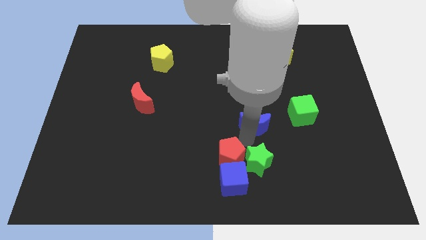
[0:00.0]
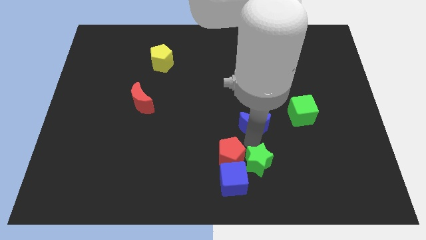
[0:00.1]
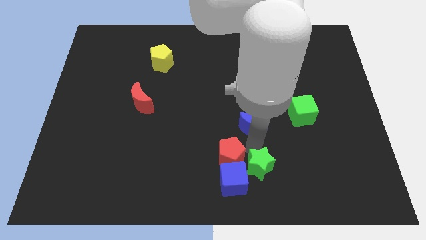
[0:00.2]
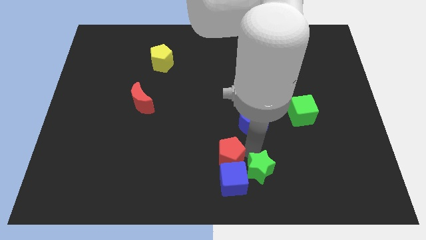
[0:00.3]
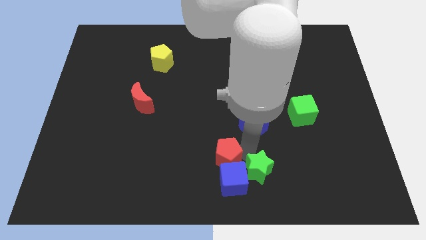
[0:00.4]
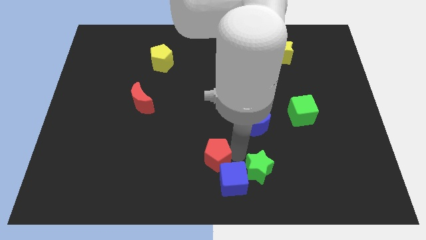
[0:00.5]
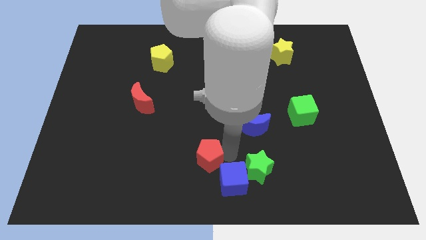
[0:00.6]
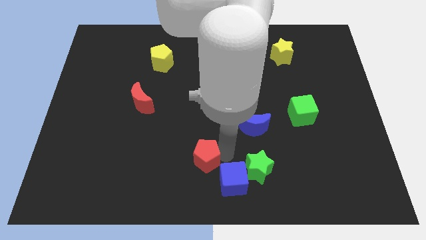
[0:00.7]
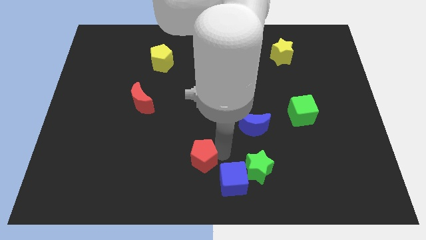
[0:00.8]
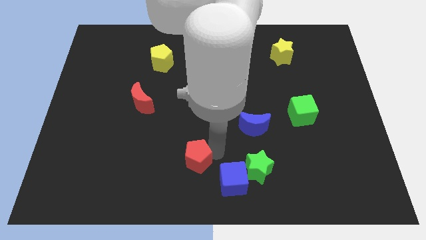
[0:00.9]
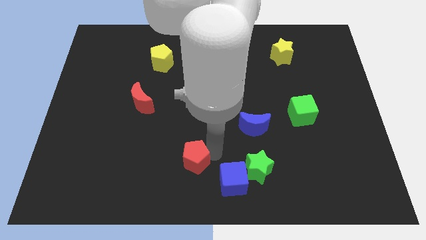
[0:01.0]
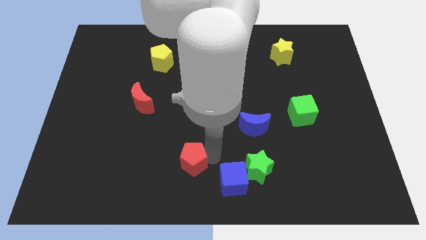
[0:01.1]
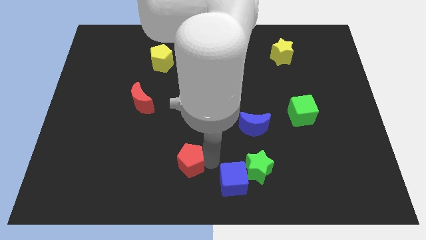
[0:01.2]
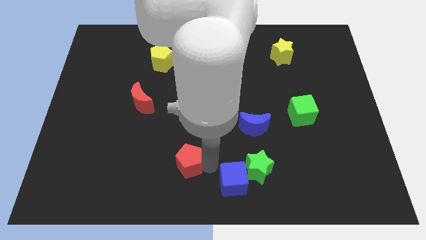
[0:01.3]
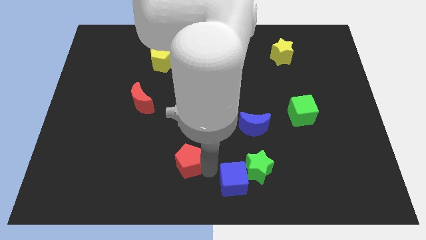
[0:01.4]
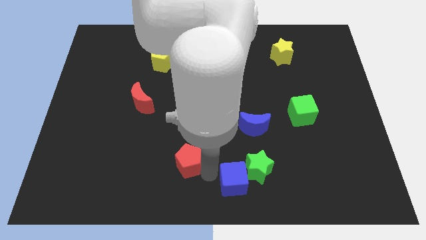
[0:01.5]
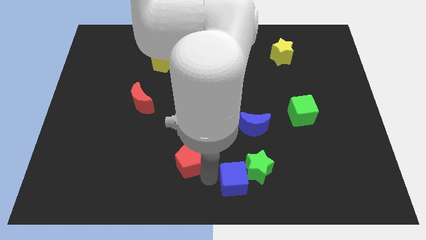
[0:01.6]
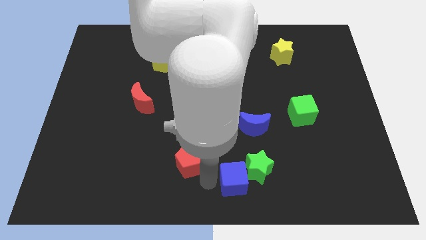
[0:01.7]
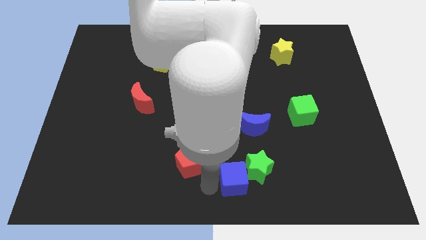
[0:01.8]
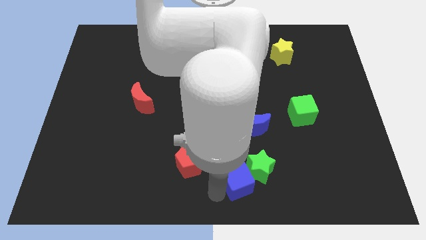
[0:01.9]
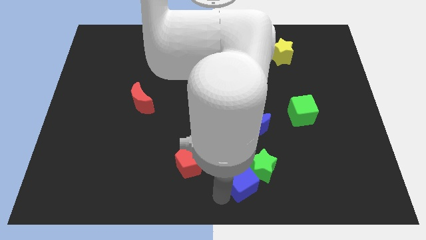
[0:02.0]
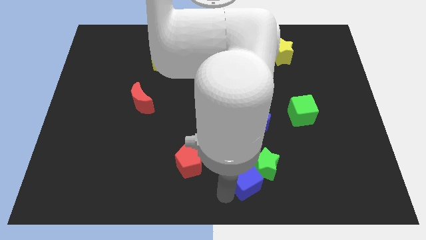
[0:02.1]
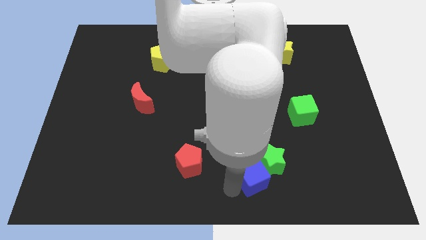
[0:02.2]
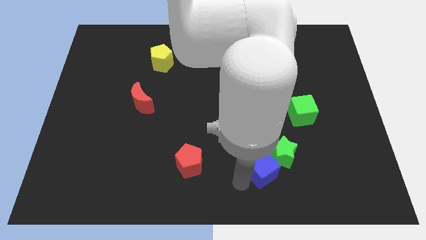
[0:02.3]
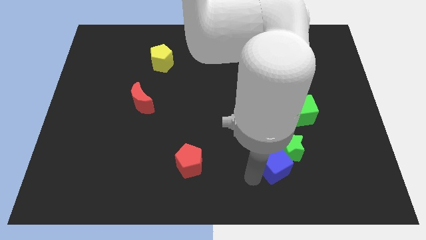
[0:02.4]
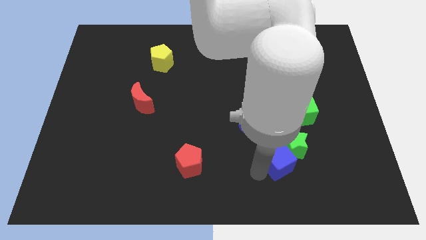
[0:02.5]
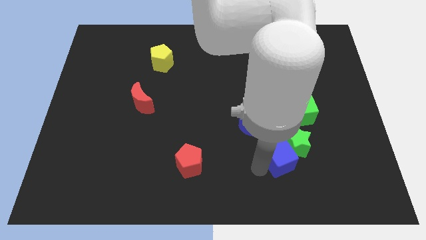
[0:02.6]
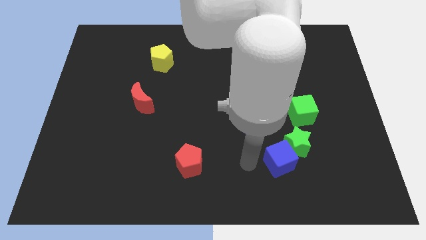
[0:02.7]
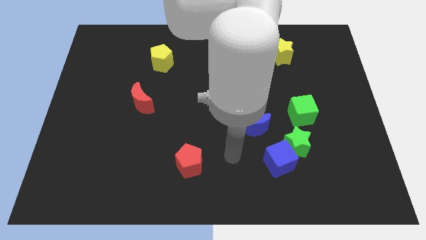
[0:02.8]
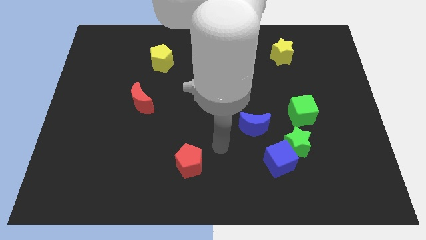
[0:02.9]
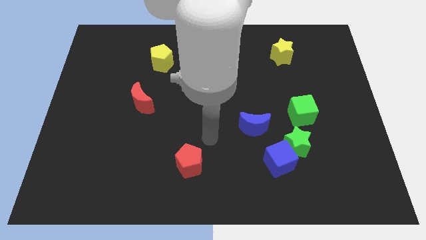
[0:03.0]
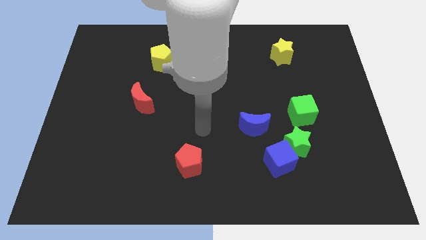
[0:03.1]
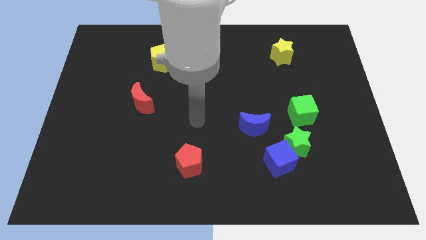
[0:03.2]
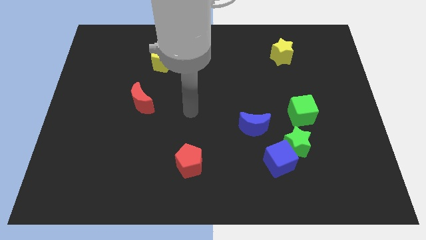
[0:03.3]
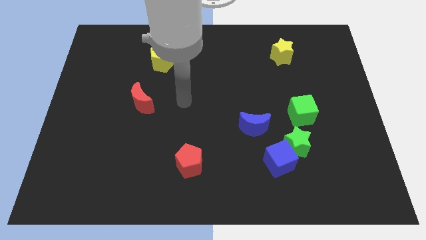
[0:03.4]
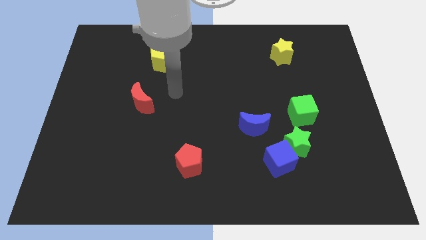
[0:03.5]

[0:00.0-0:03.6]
separate red pentagon from the green star

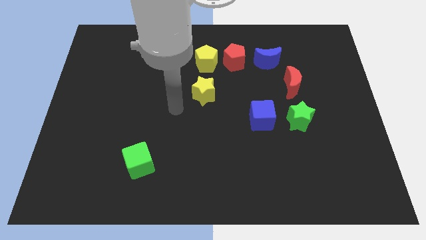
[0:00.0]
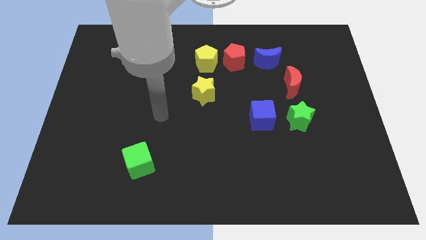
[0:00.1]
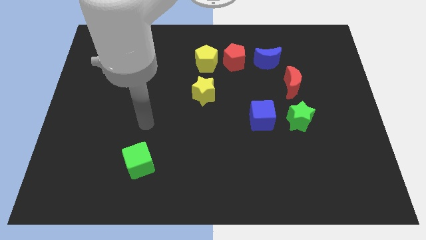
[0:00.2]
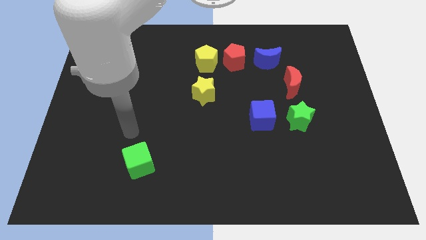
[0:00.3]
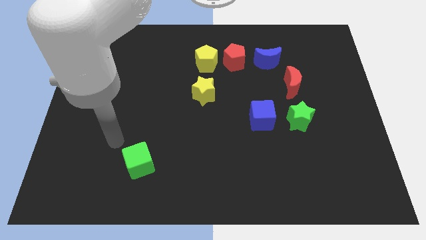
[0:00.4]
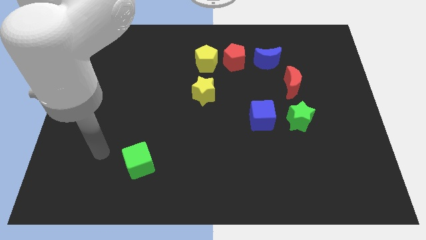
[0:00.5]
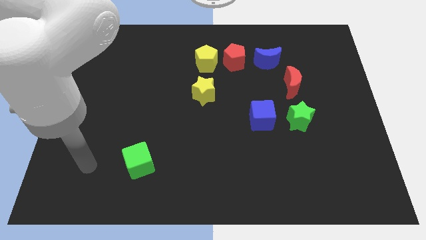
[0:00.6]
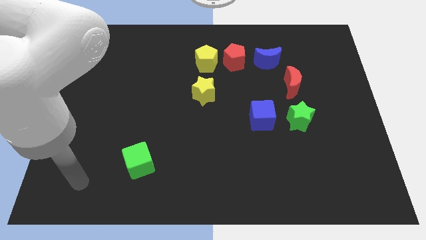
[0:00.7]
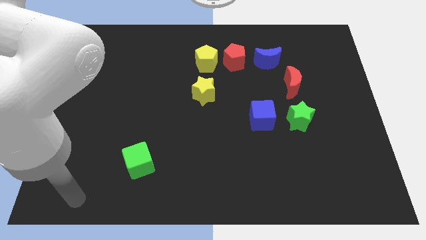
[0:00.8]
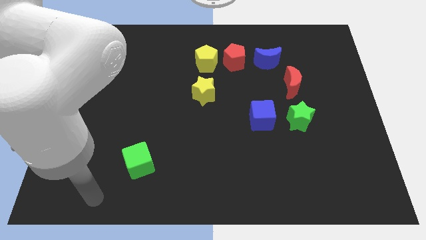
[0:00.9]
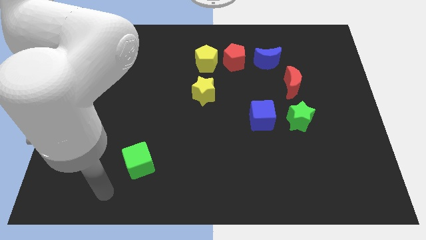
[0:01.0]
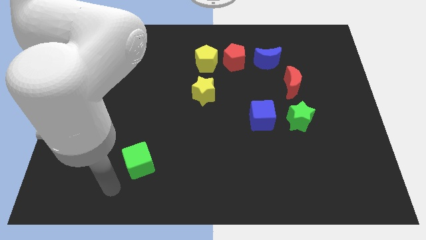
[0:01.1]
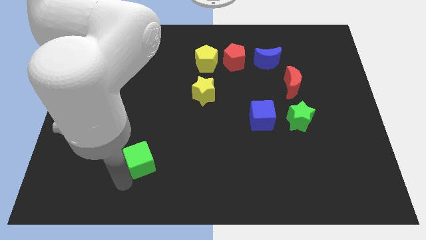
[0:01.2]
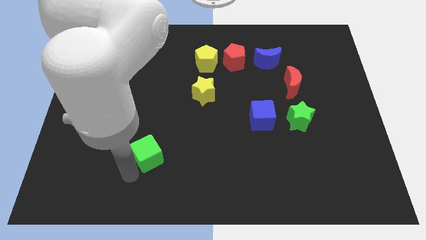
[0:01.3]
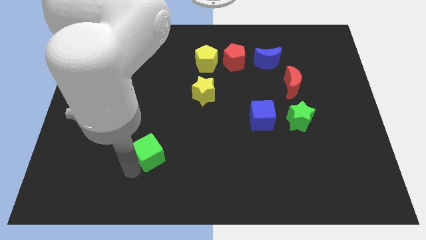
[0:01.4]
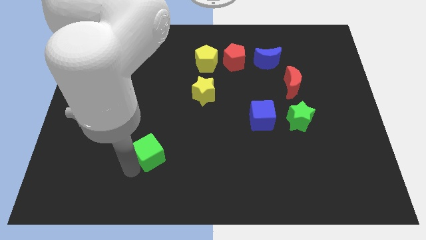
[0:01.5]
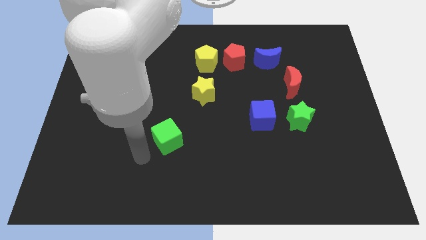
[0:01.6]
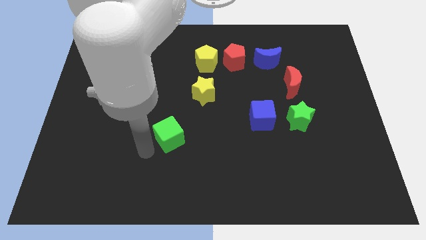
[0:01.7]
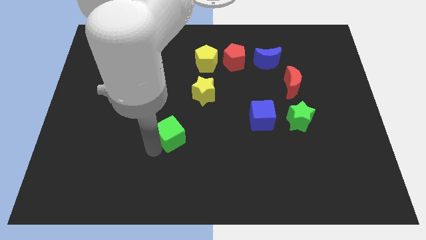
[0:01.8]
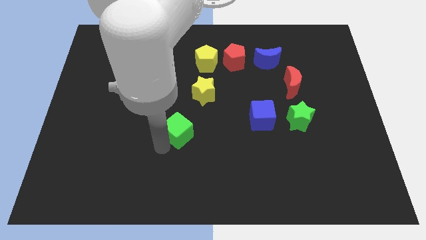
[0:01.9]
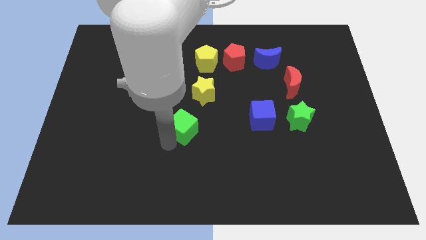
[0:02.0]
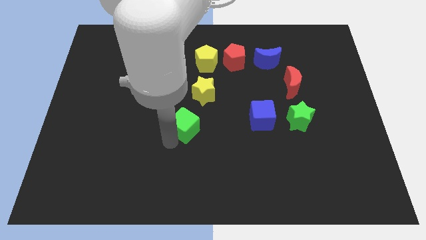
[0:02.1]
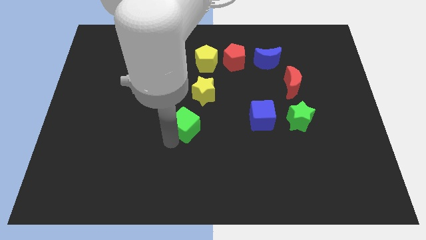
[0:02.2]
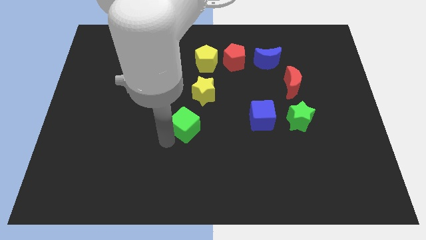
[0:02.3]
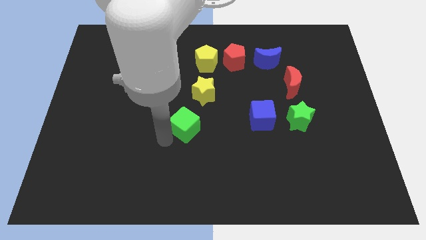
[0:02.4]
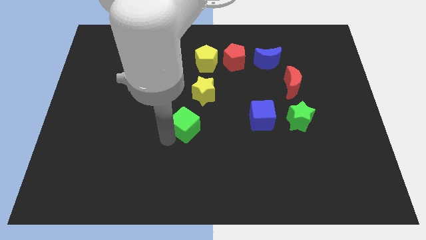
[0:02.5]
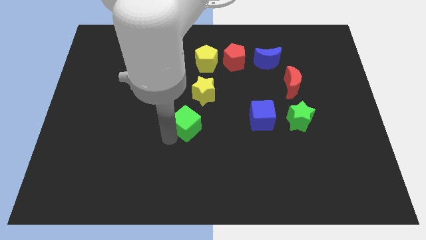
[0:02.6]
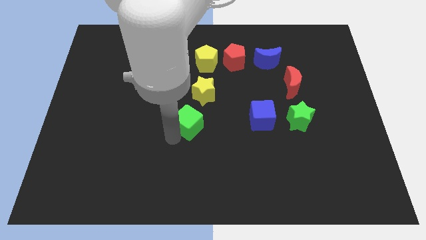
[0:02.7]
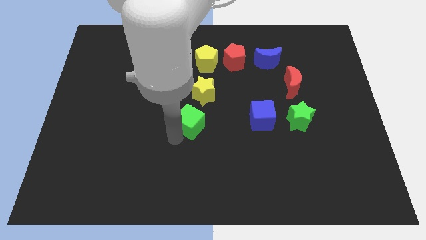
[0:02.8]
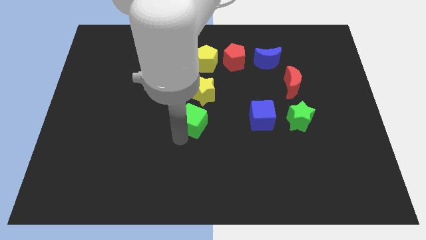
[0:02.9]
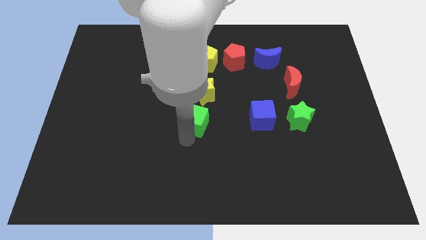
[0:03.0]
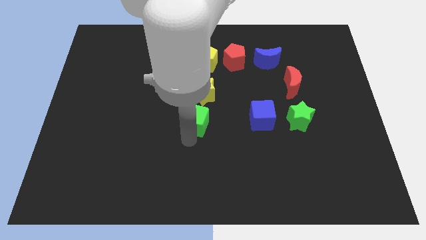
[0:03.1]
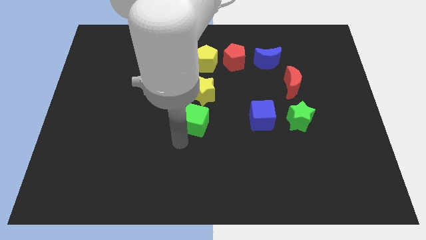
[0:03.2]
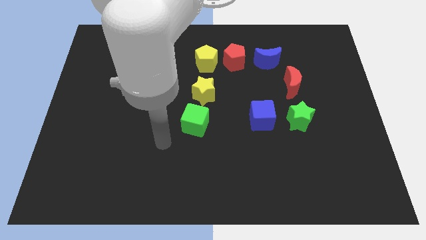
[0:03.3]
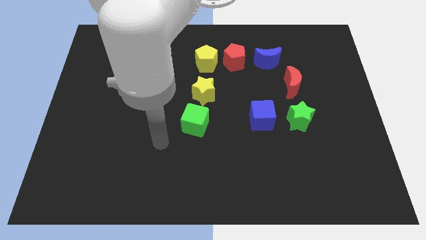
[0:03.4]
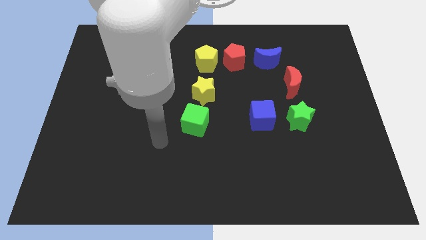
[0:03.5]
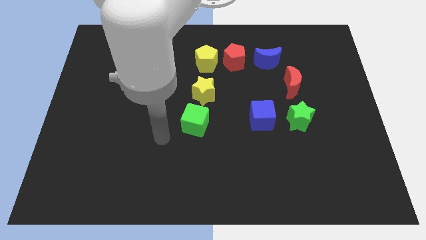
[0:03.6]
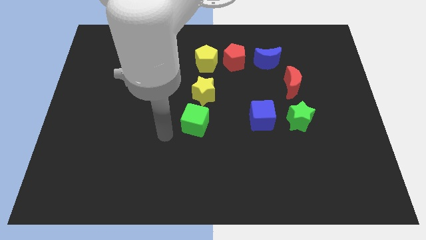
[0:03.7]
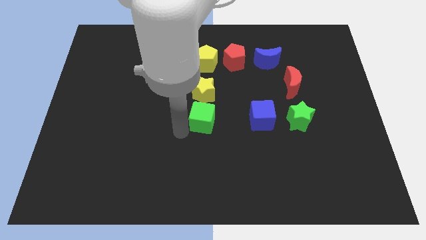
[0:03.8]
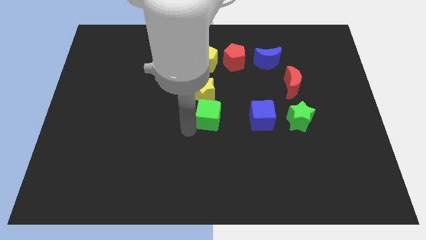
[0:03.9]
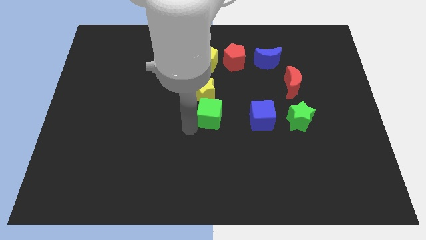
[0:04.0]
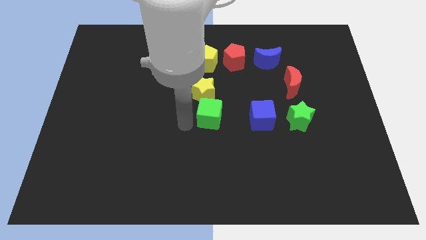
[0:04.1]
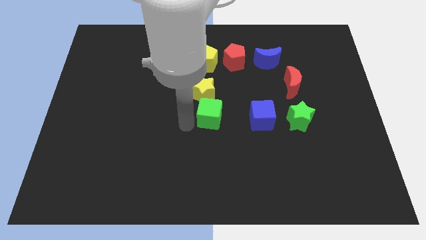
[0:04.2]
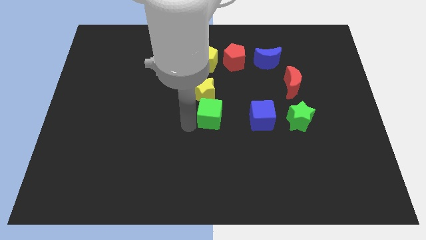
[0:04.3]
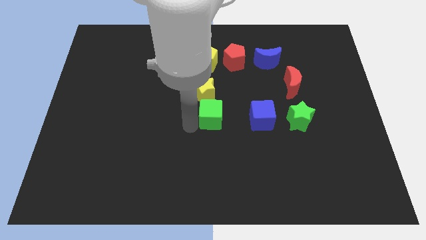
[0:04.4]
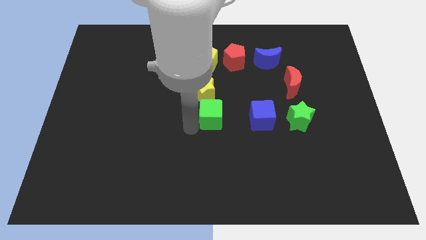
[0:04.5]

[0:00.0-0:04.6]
place the green cube below the yellow star to form a vertical line

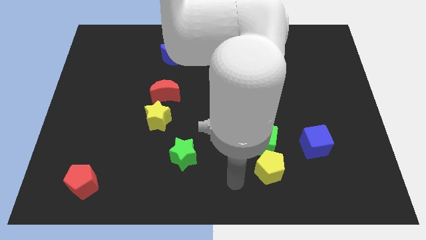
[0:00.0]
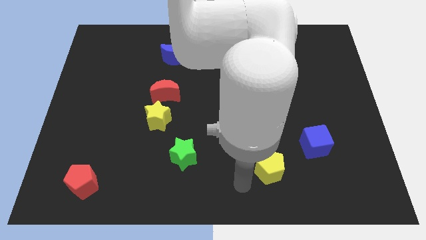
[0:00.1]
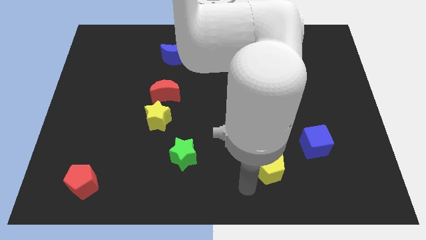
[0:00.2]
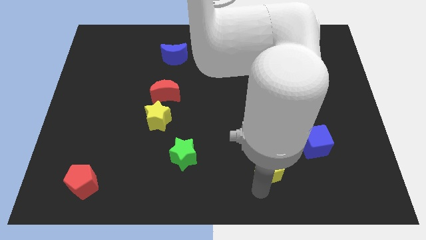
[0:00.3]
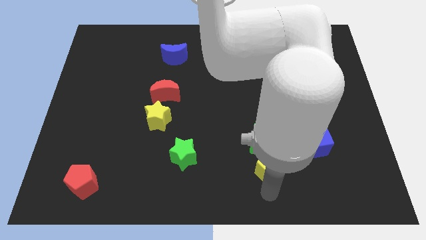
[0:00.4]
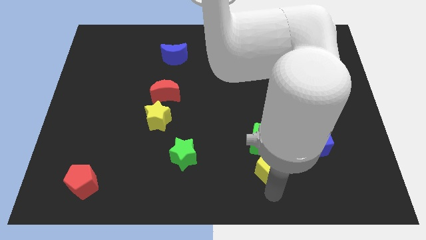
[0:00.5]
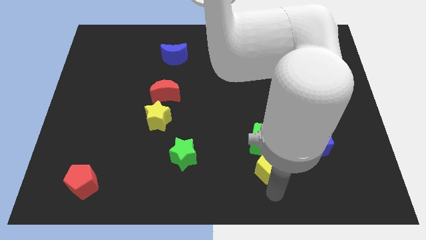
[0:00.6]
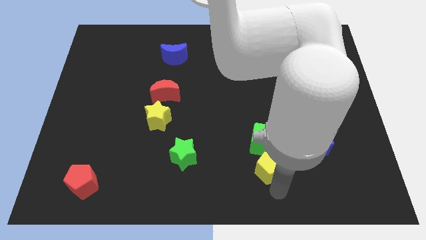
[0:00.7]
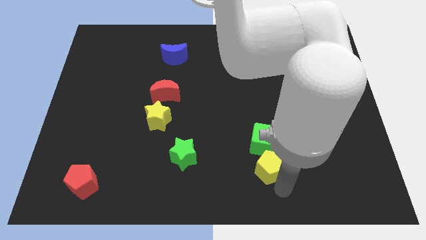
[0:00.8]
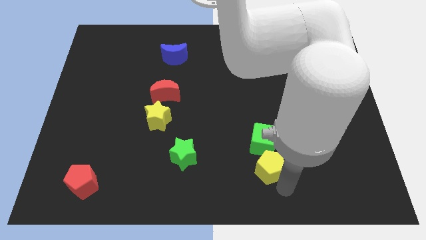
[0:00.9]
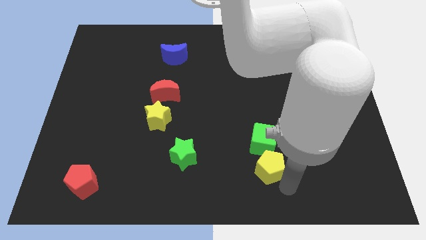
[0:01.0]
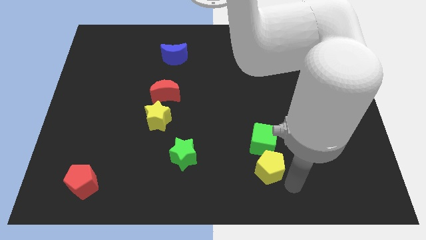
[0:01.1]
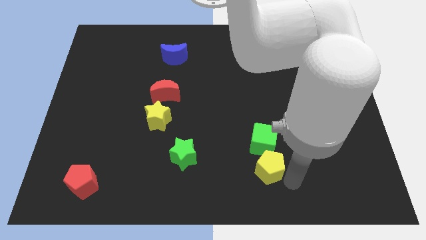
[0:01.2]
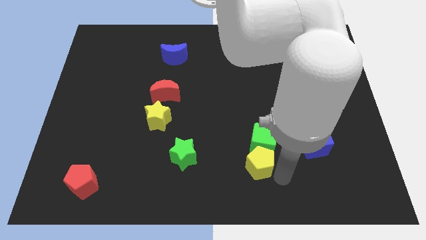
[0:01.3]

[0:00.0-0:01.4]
move the yellow pentagon exactly below the green cube
